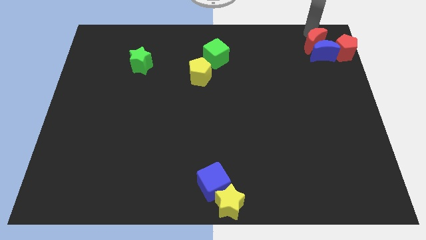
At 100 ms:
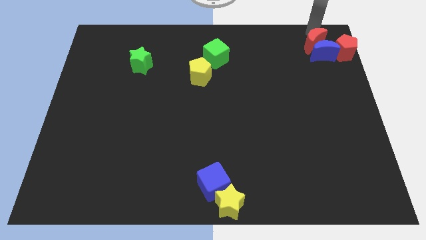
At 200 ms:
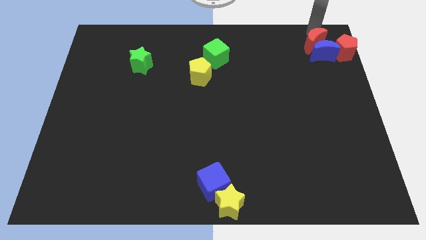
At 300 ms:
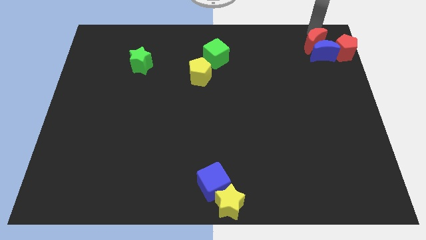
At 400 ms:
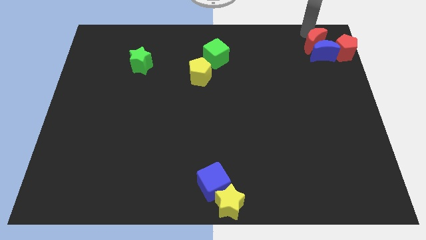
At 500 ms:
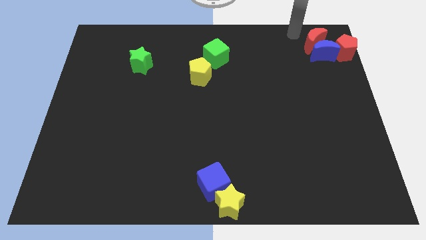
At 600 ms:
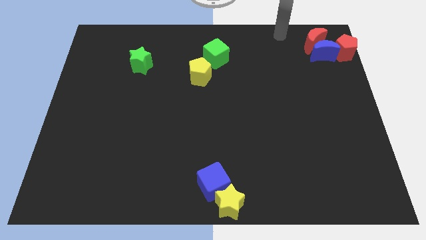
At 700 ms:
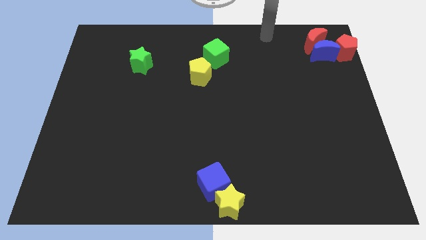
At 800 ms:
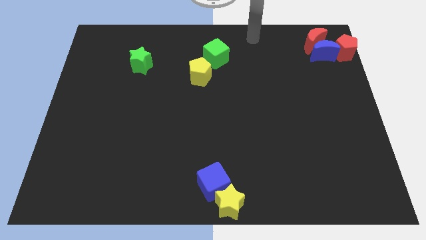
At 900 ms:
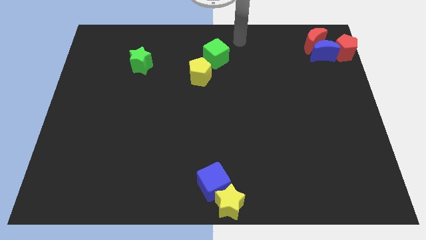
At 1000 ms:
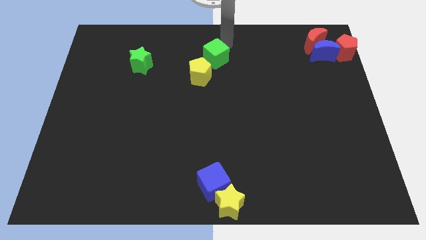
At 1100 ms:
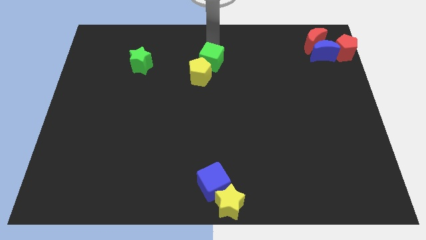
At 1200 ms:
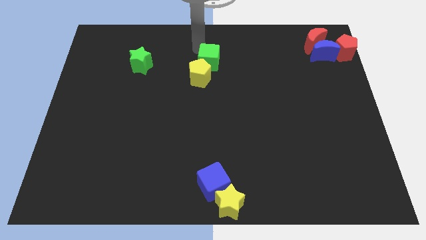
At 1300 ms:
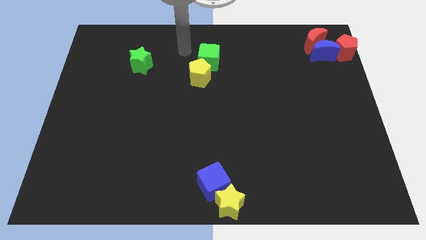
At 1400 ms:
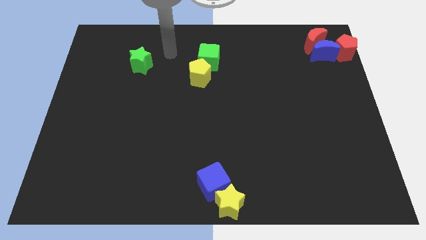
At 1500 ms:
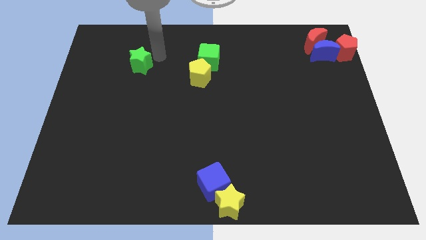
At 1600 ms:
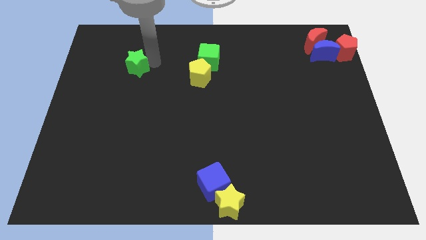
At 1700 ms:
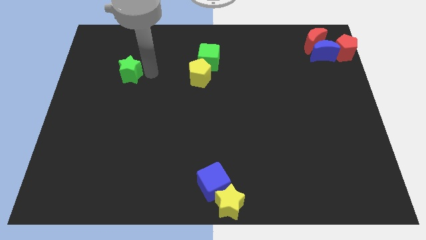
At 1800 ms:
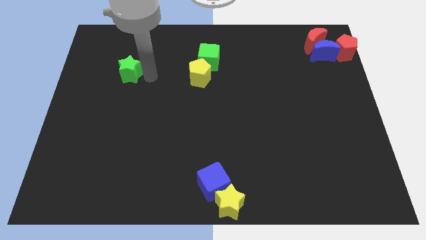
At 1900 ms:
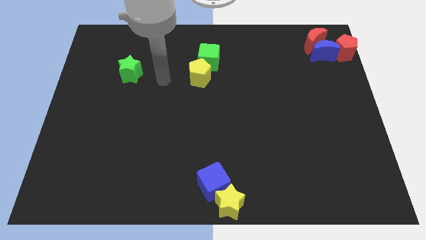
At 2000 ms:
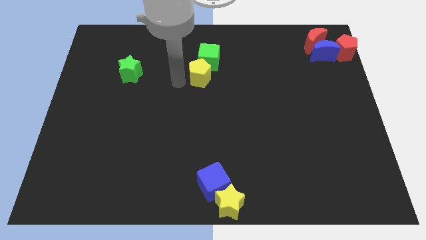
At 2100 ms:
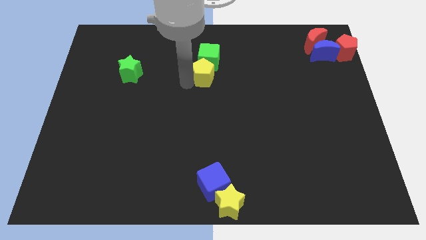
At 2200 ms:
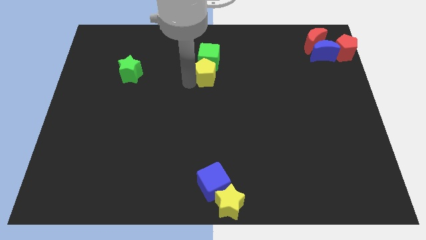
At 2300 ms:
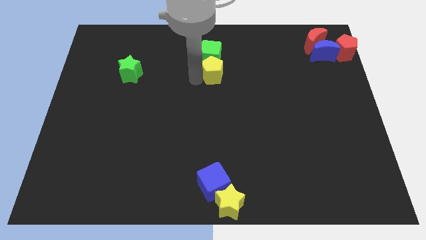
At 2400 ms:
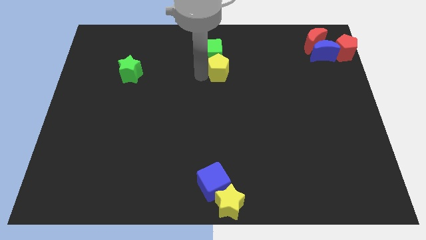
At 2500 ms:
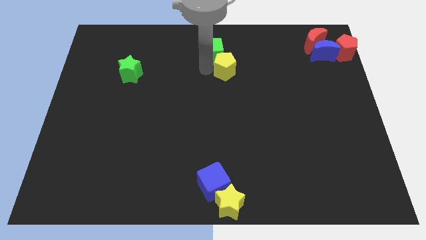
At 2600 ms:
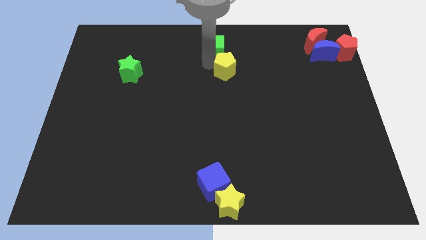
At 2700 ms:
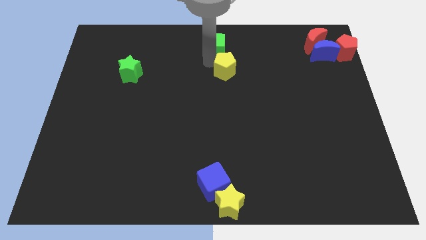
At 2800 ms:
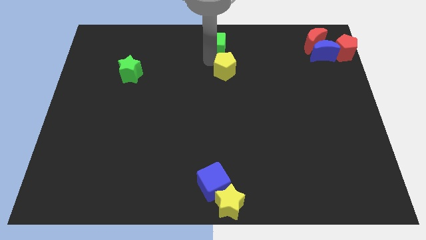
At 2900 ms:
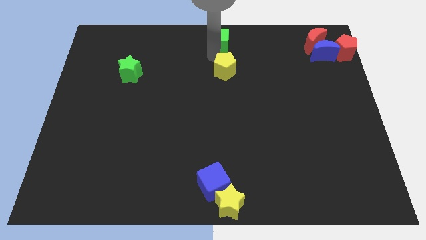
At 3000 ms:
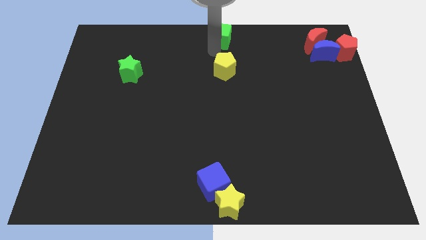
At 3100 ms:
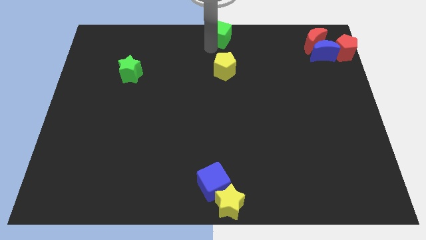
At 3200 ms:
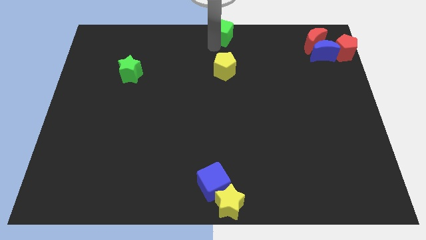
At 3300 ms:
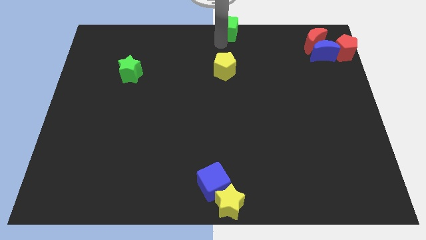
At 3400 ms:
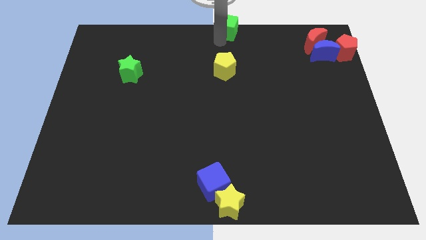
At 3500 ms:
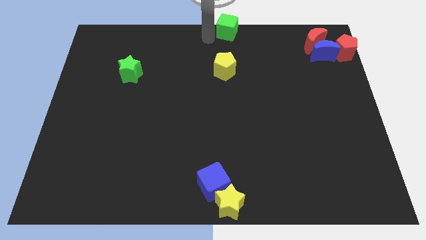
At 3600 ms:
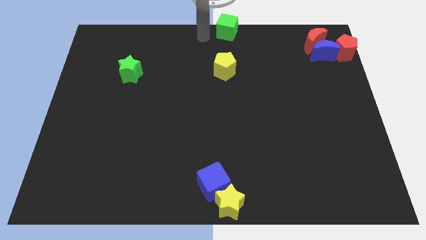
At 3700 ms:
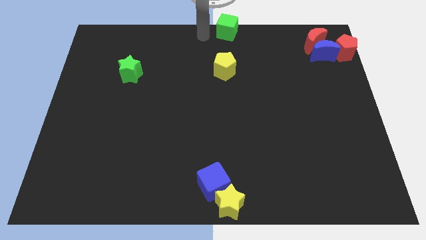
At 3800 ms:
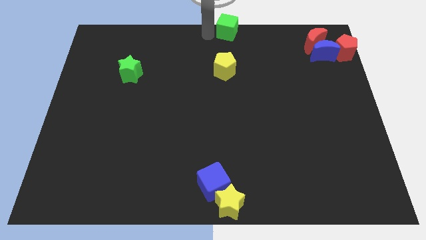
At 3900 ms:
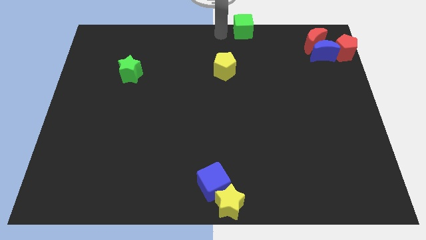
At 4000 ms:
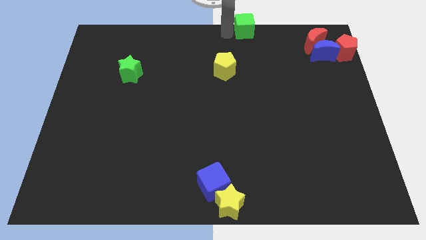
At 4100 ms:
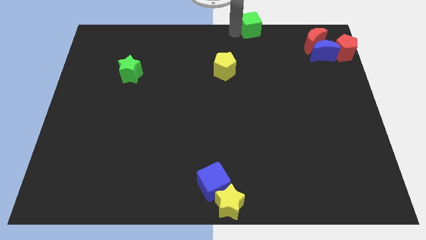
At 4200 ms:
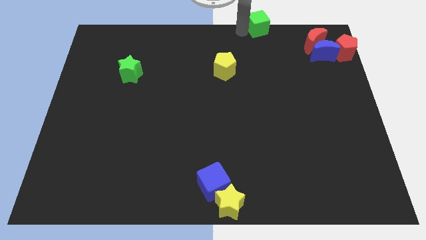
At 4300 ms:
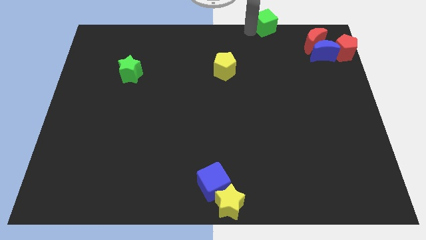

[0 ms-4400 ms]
move the green cube diagonally top right to the yellow pentagon

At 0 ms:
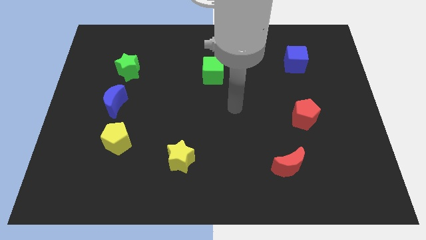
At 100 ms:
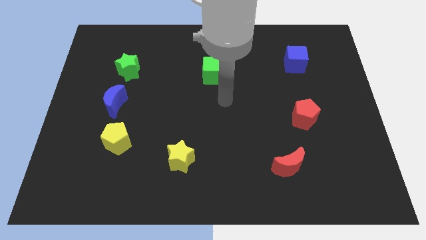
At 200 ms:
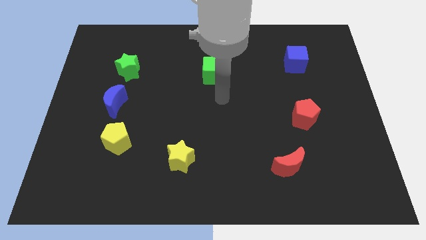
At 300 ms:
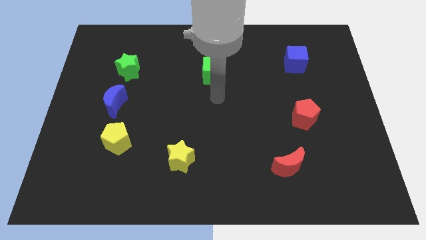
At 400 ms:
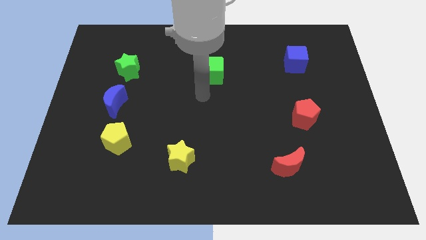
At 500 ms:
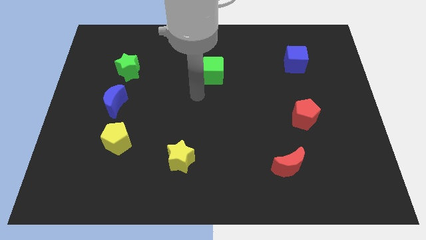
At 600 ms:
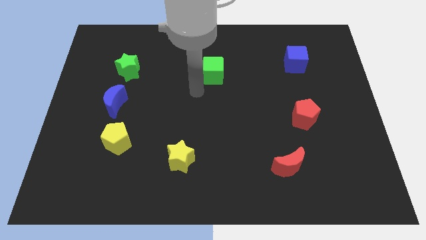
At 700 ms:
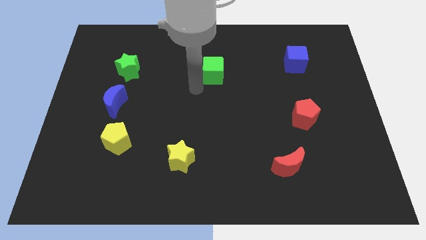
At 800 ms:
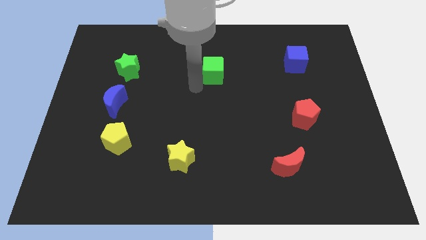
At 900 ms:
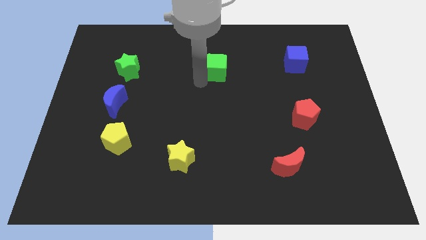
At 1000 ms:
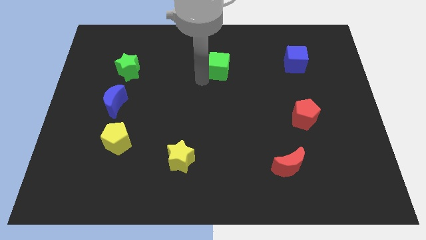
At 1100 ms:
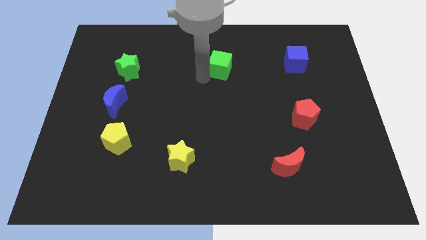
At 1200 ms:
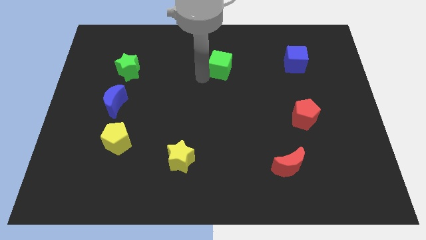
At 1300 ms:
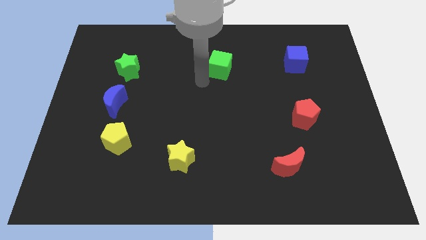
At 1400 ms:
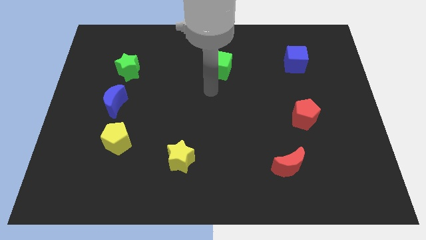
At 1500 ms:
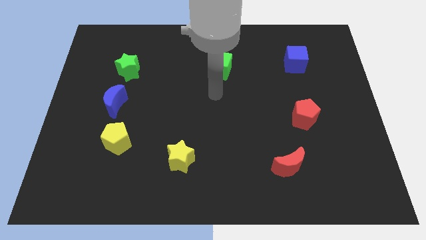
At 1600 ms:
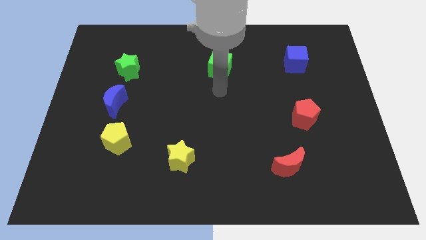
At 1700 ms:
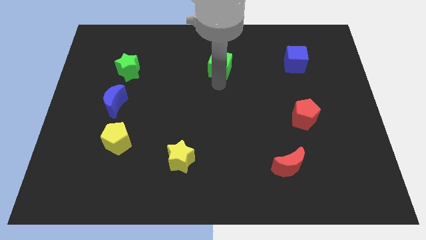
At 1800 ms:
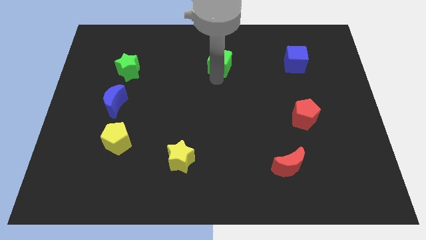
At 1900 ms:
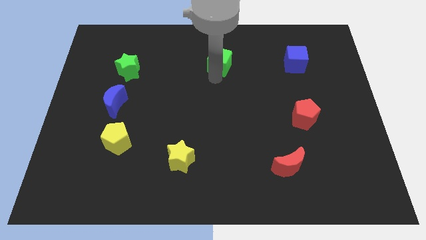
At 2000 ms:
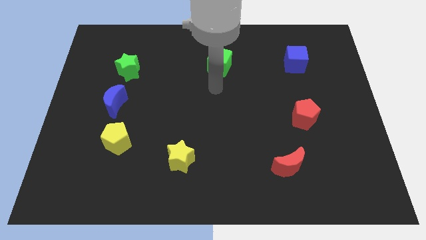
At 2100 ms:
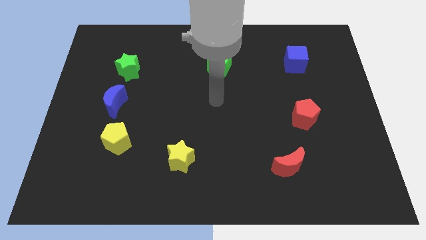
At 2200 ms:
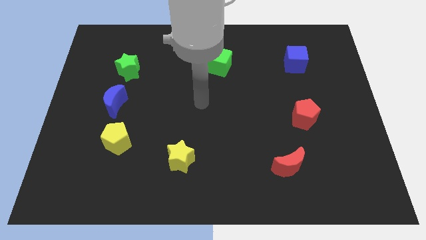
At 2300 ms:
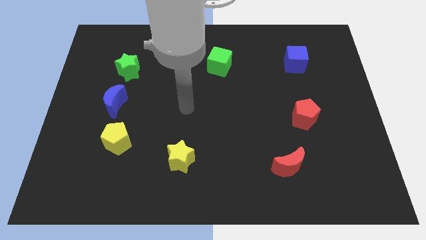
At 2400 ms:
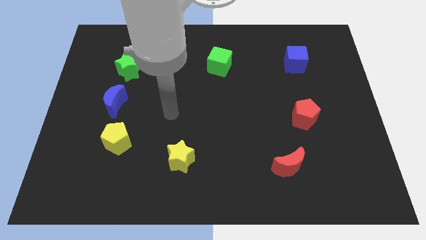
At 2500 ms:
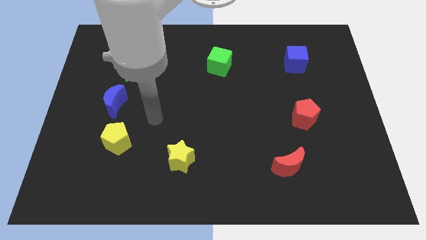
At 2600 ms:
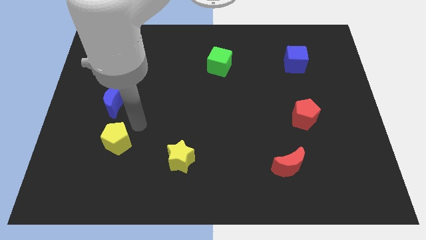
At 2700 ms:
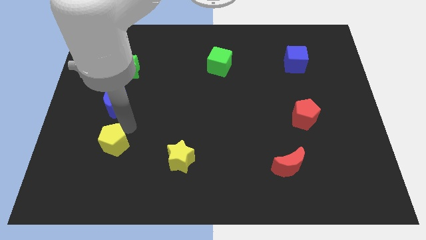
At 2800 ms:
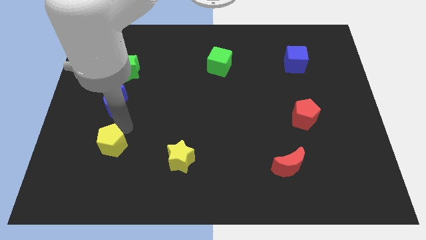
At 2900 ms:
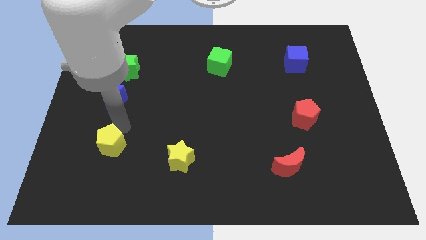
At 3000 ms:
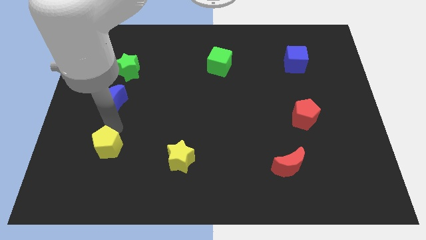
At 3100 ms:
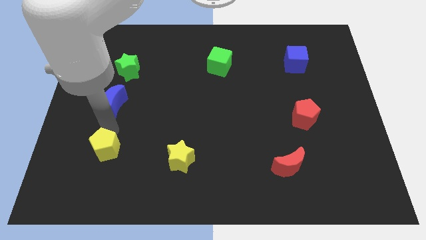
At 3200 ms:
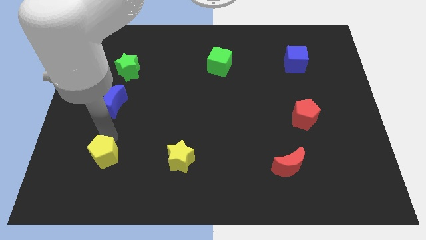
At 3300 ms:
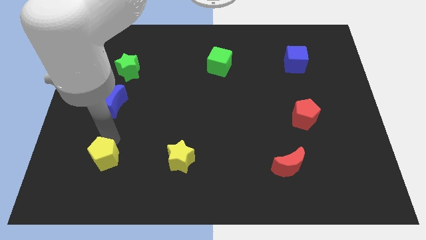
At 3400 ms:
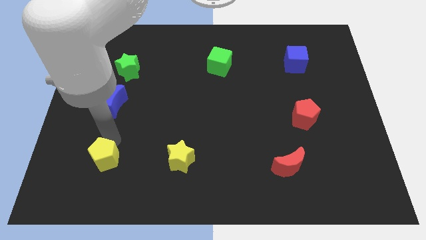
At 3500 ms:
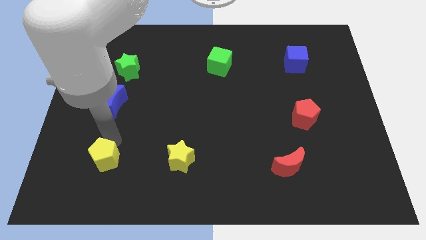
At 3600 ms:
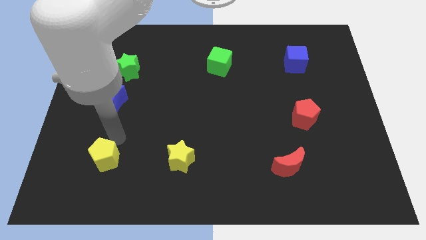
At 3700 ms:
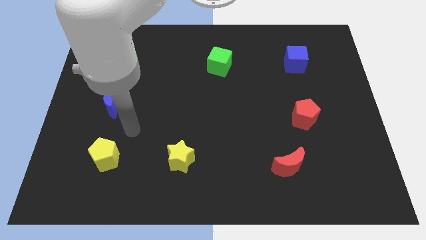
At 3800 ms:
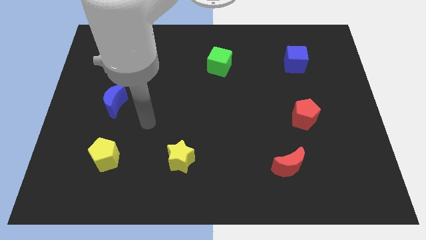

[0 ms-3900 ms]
slightly push the yellow pentagon downward

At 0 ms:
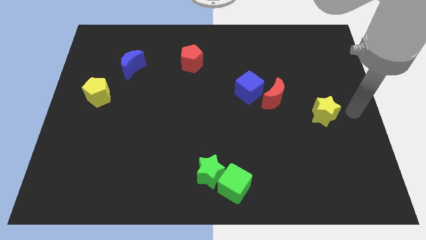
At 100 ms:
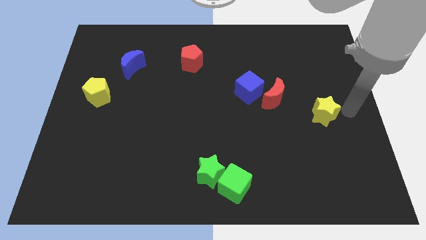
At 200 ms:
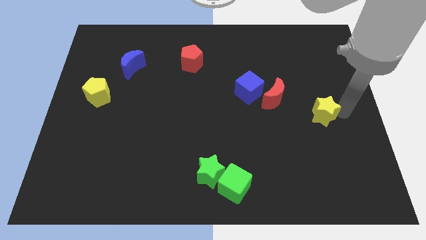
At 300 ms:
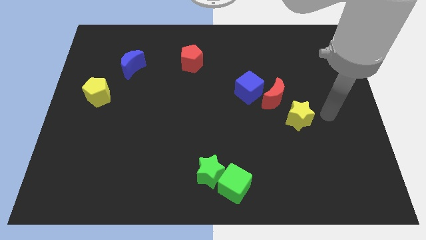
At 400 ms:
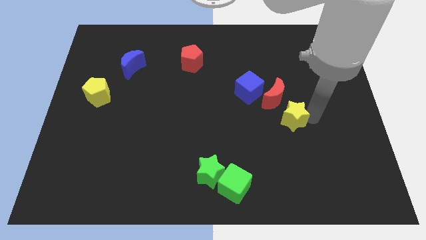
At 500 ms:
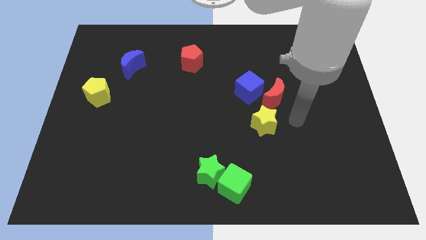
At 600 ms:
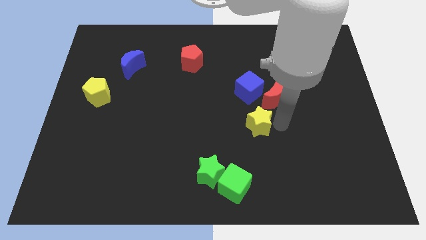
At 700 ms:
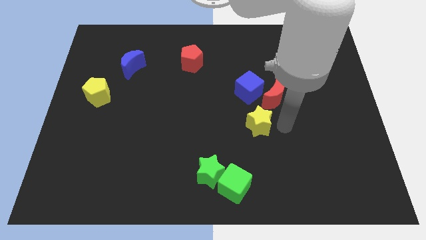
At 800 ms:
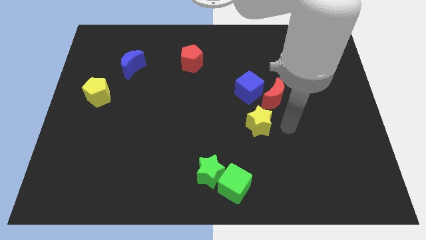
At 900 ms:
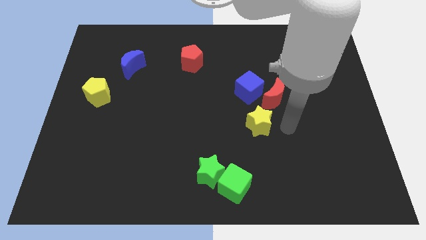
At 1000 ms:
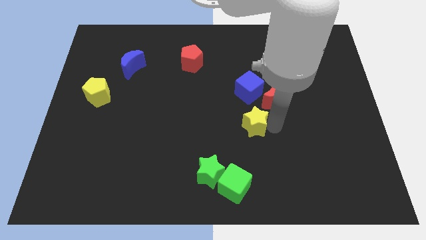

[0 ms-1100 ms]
place the yellow star below the blue cube
